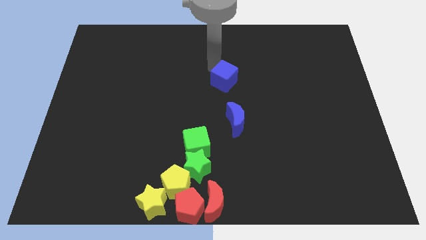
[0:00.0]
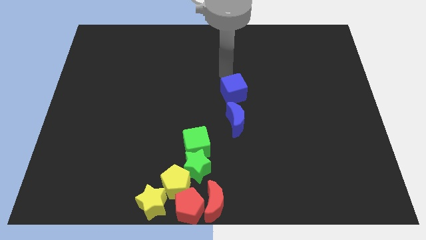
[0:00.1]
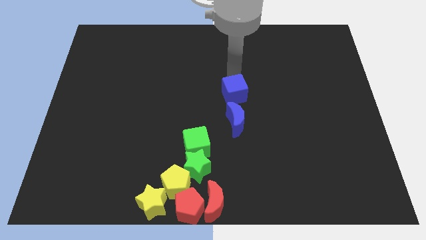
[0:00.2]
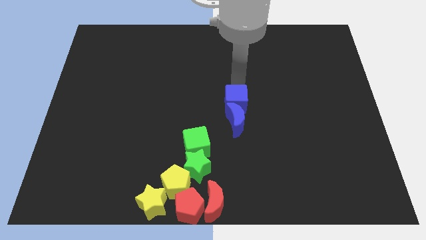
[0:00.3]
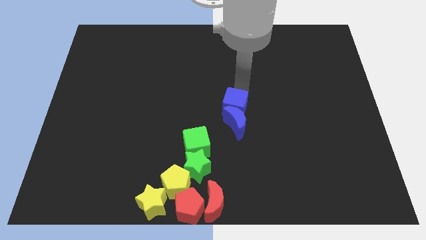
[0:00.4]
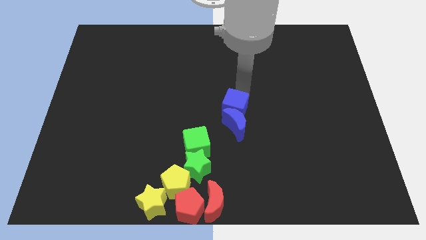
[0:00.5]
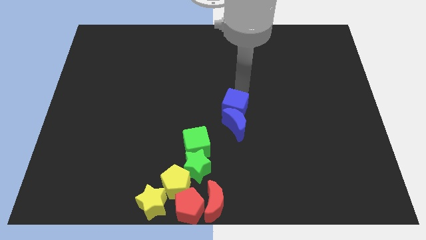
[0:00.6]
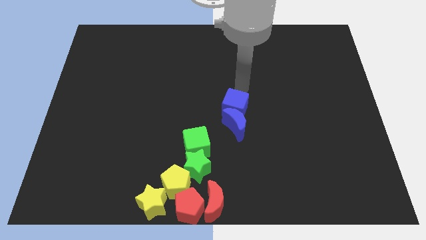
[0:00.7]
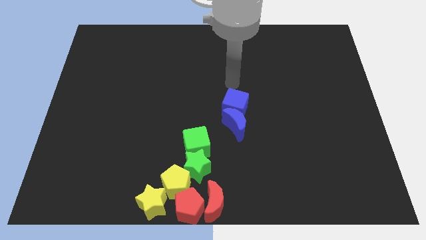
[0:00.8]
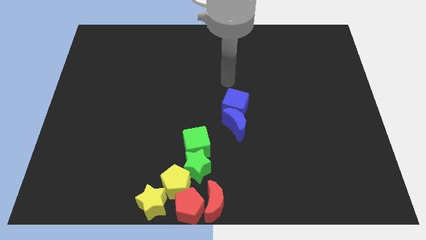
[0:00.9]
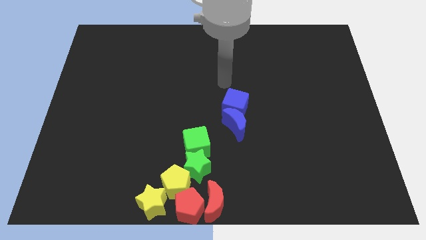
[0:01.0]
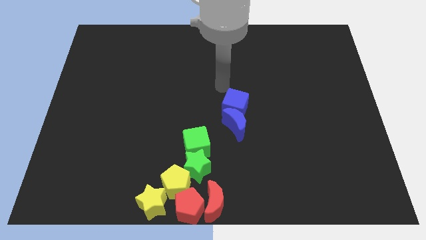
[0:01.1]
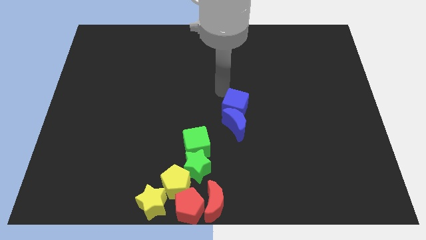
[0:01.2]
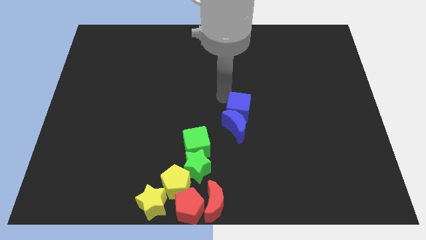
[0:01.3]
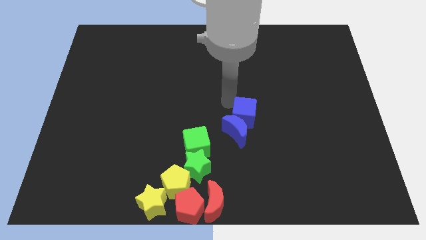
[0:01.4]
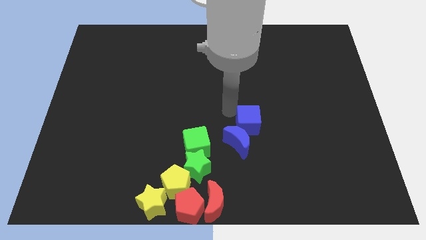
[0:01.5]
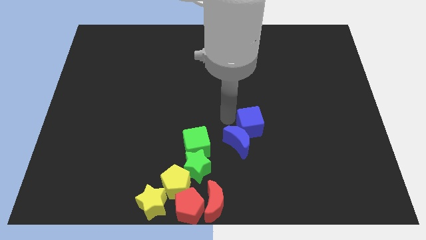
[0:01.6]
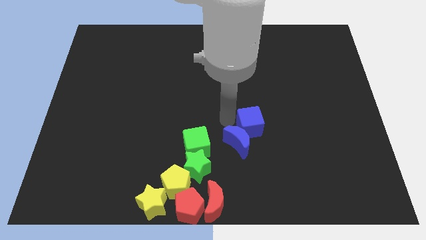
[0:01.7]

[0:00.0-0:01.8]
move the group of blue blocks to the bottom

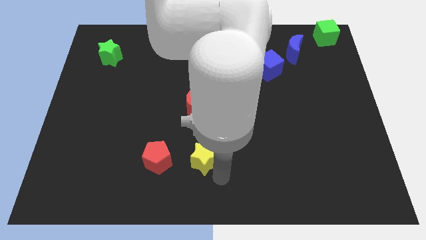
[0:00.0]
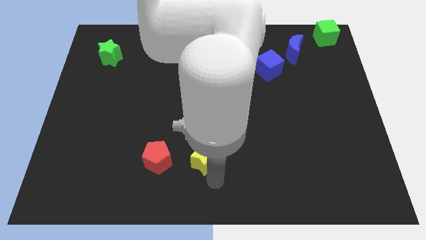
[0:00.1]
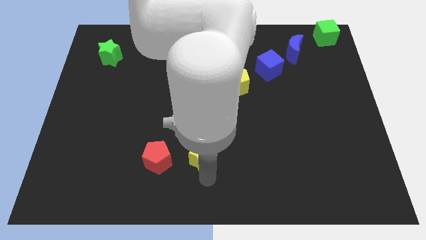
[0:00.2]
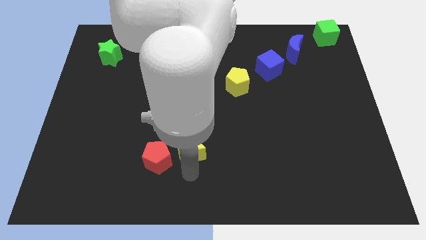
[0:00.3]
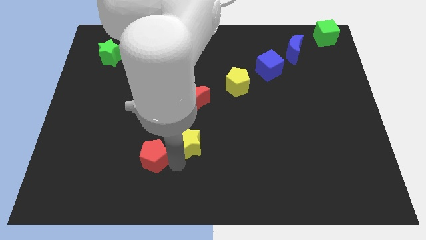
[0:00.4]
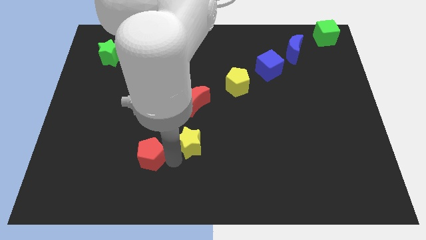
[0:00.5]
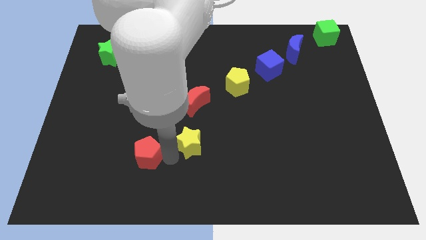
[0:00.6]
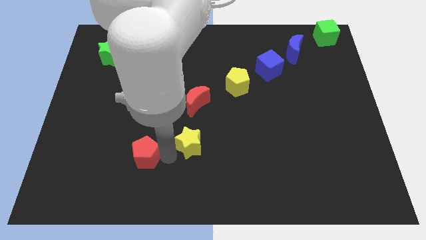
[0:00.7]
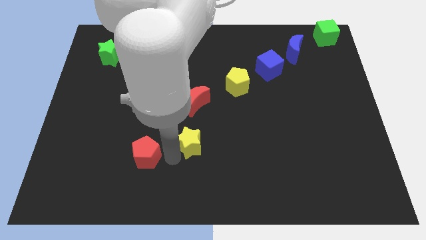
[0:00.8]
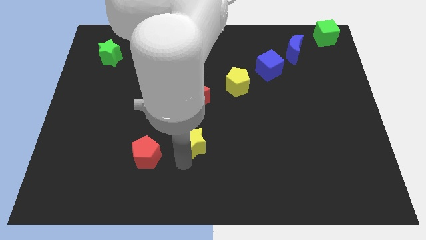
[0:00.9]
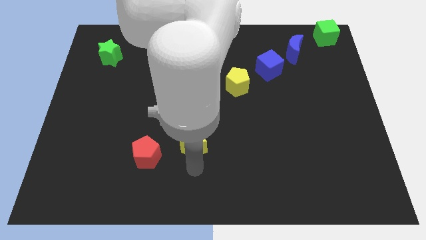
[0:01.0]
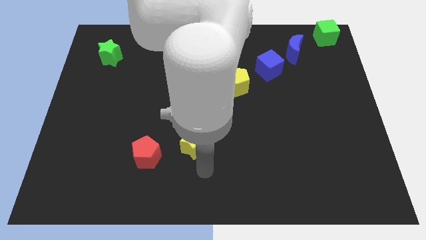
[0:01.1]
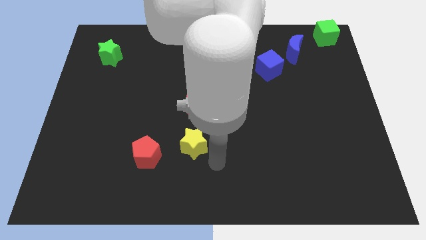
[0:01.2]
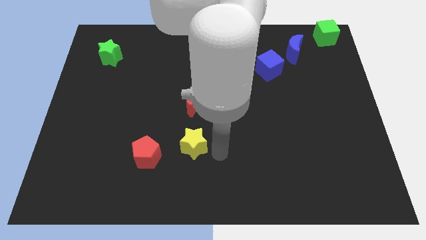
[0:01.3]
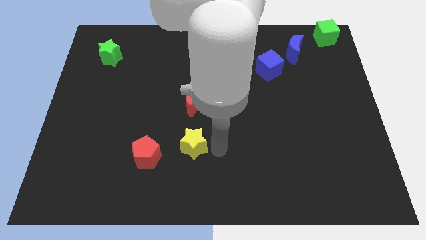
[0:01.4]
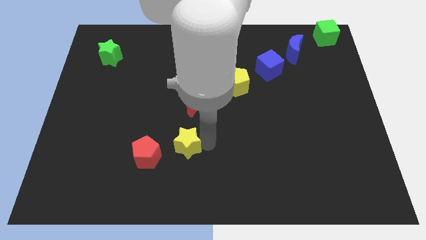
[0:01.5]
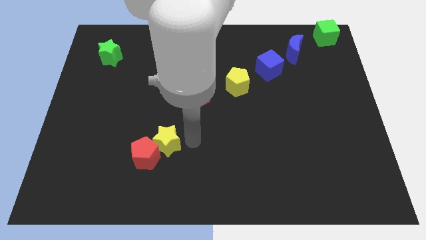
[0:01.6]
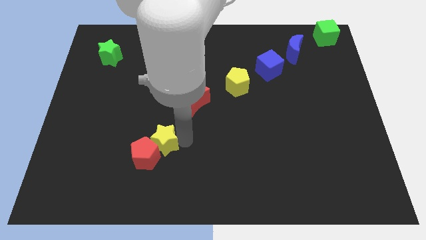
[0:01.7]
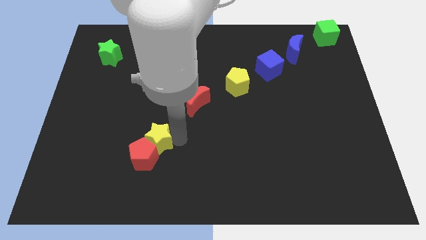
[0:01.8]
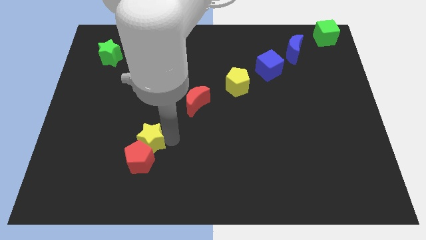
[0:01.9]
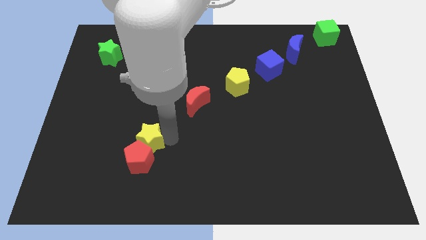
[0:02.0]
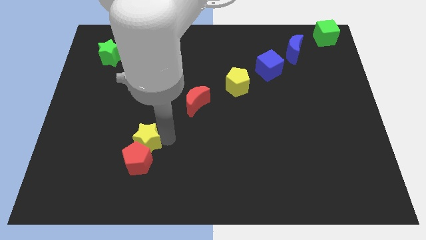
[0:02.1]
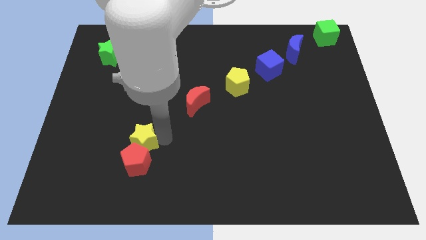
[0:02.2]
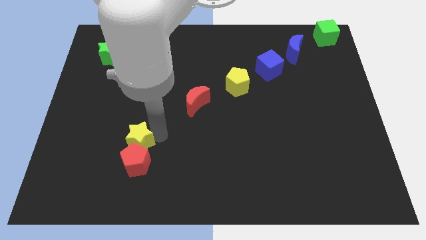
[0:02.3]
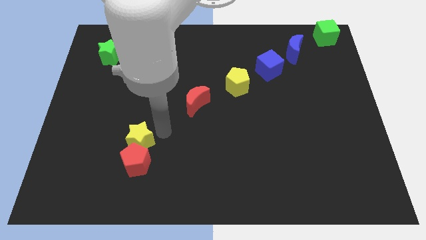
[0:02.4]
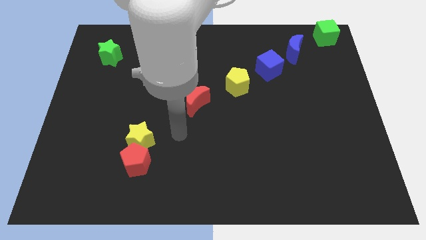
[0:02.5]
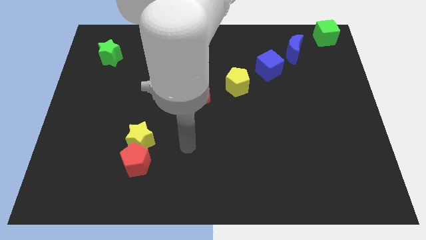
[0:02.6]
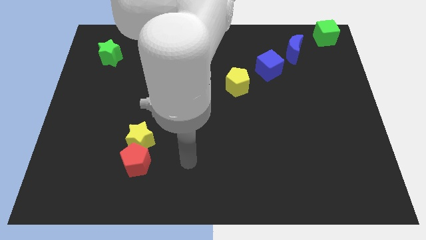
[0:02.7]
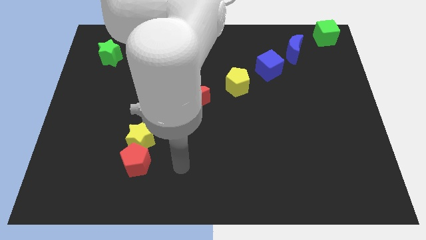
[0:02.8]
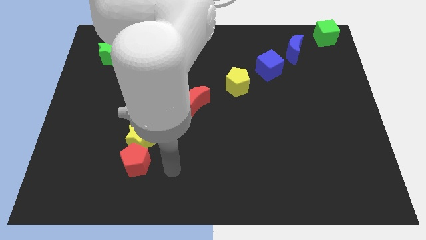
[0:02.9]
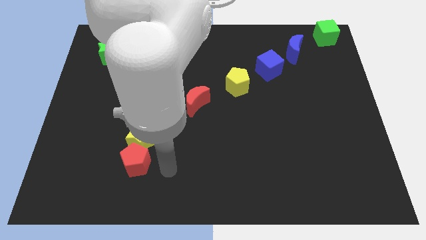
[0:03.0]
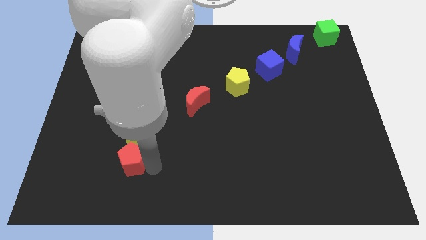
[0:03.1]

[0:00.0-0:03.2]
push the yellow star and red pentagon to the left side of the board

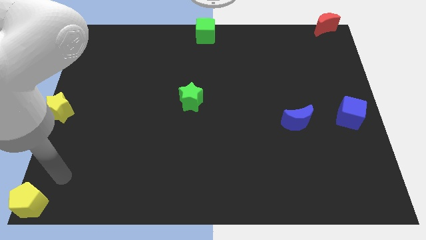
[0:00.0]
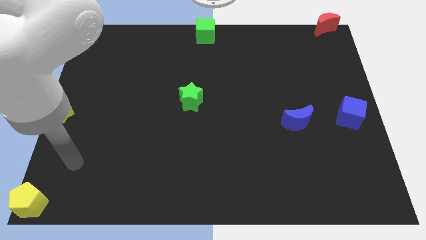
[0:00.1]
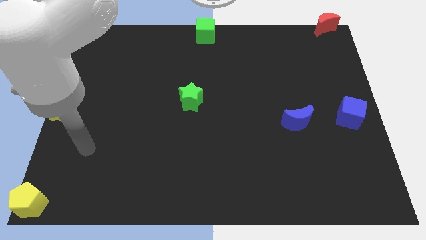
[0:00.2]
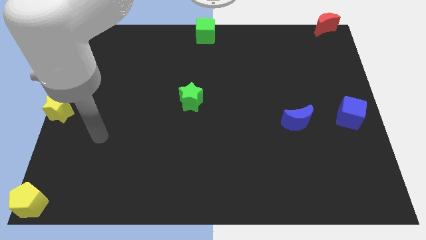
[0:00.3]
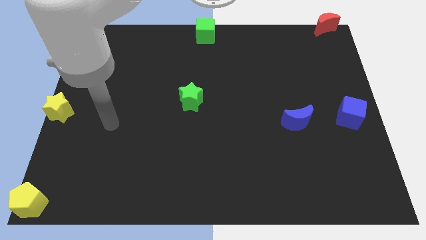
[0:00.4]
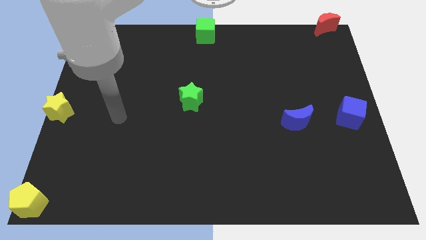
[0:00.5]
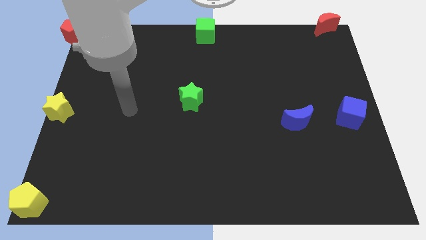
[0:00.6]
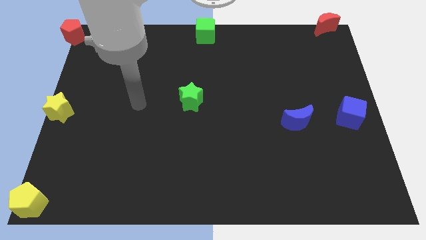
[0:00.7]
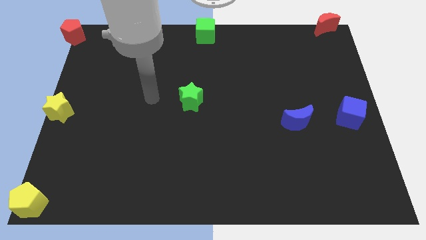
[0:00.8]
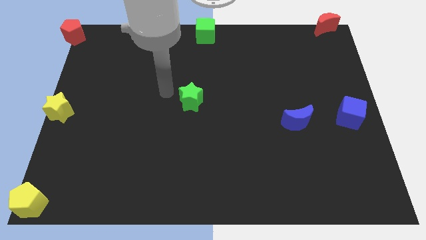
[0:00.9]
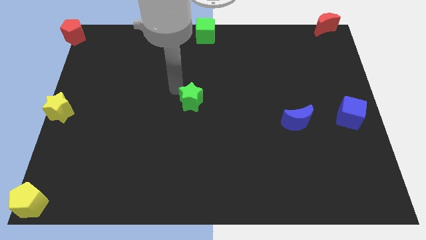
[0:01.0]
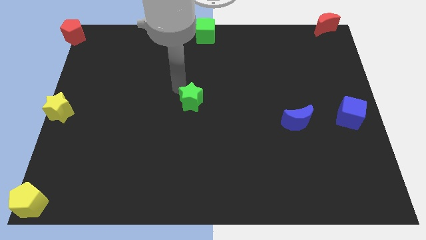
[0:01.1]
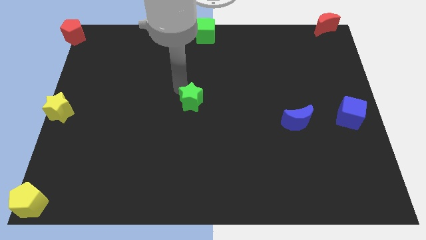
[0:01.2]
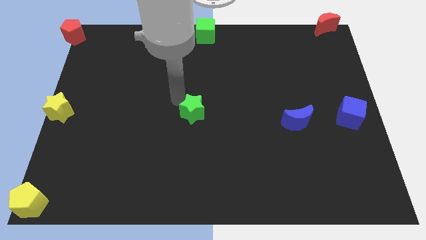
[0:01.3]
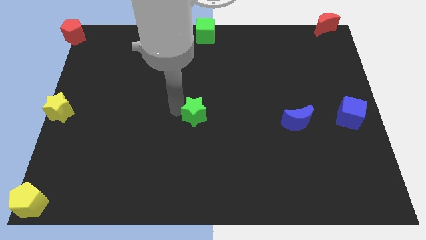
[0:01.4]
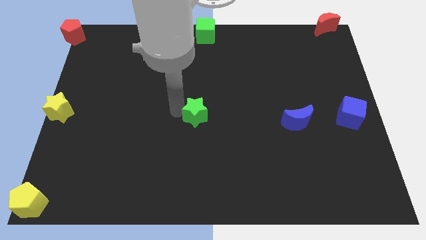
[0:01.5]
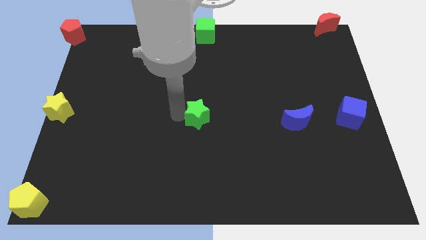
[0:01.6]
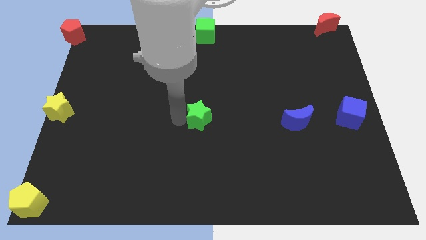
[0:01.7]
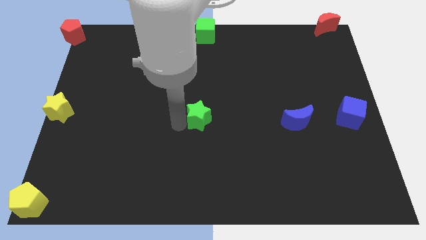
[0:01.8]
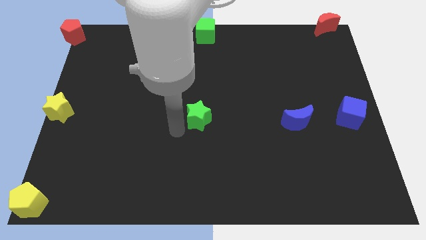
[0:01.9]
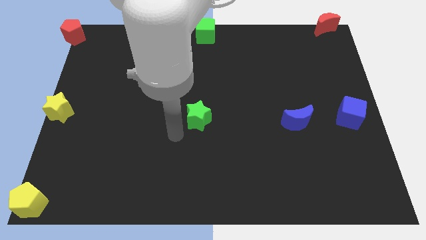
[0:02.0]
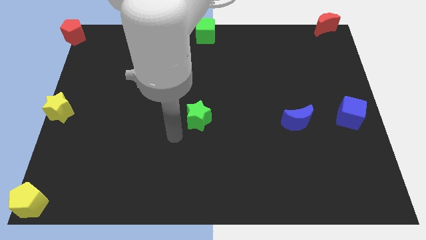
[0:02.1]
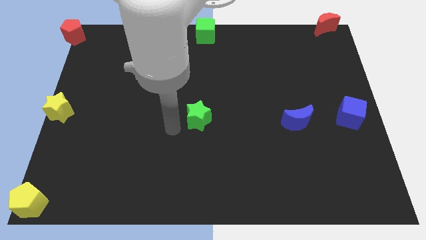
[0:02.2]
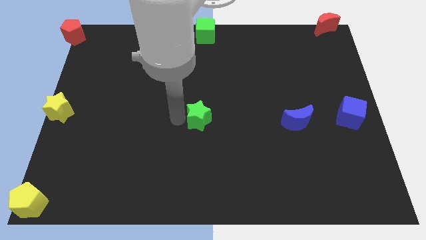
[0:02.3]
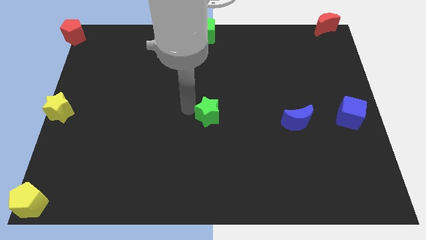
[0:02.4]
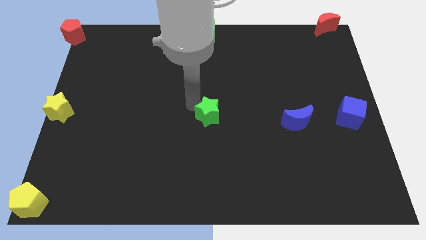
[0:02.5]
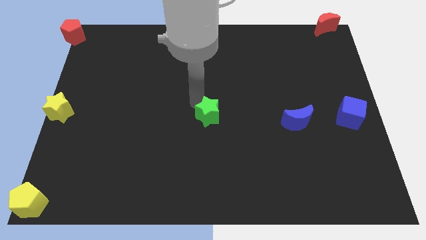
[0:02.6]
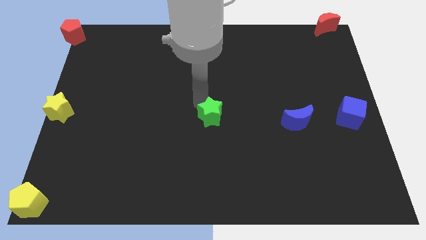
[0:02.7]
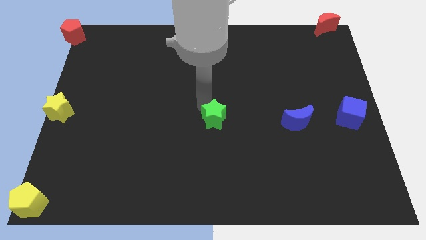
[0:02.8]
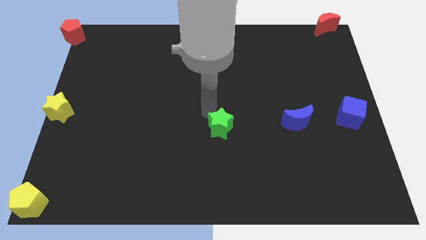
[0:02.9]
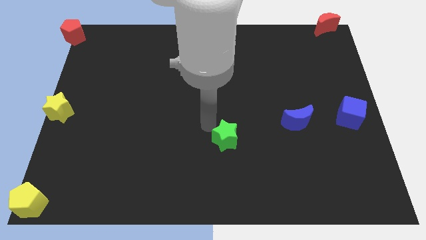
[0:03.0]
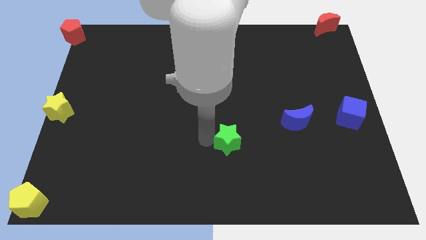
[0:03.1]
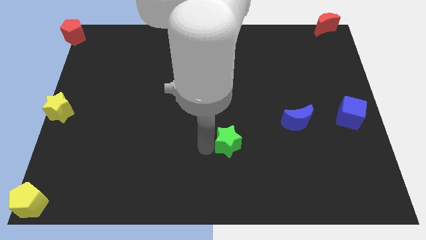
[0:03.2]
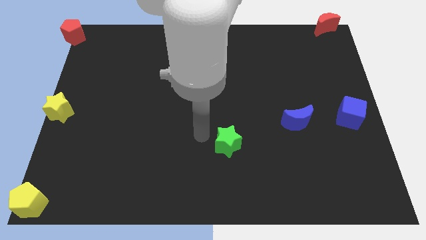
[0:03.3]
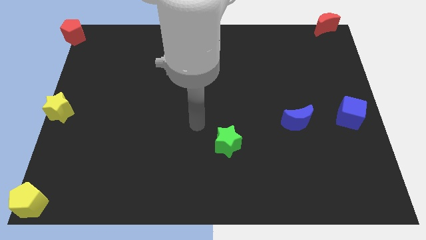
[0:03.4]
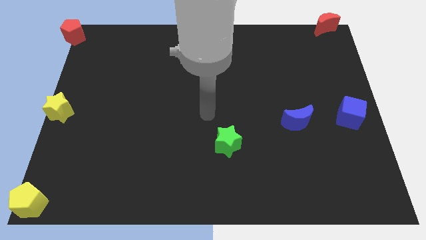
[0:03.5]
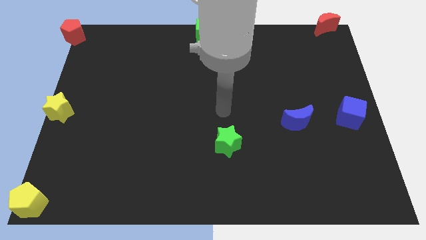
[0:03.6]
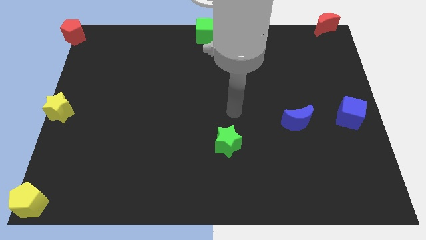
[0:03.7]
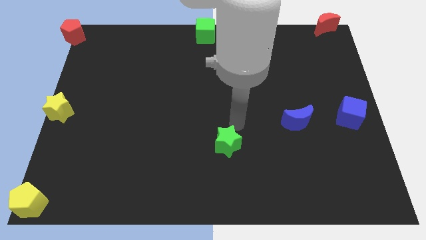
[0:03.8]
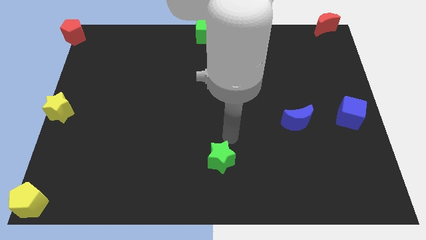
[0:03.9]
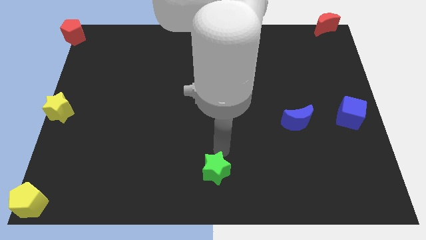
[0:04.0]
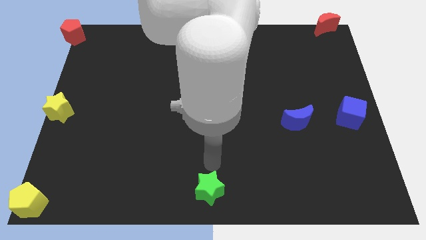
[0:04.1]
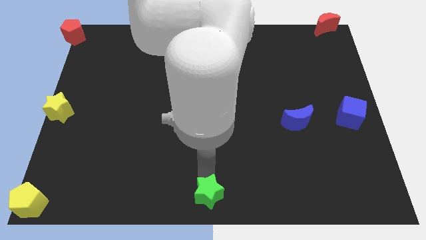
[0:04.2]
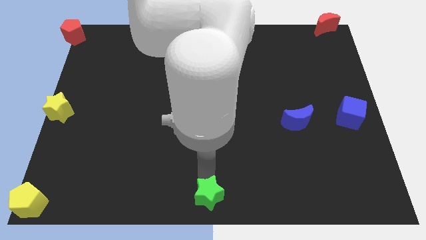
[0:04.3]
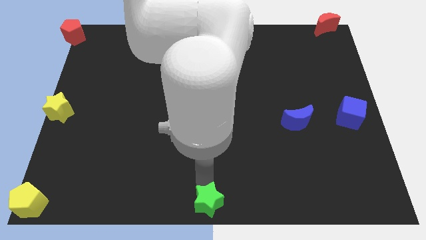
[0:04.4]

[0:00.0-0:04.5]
place the green star at the bottom center of the board
